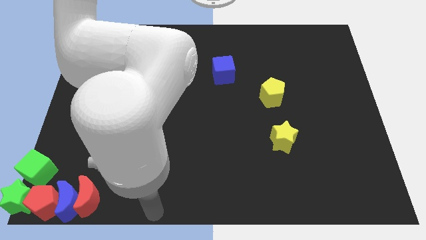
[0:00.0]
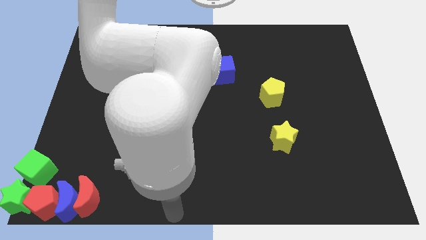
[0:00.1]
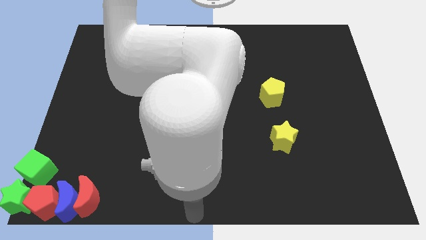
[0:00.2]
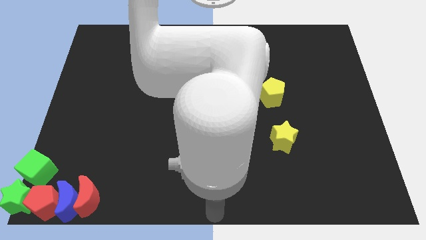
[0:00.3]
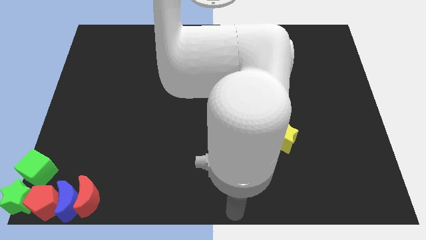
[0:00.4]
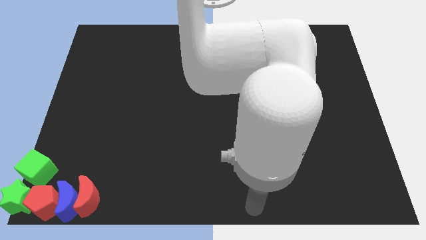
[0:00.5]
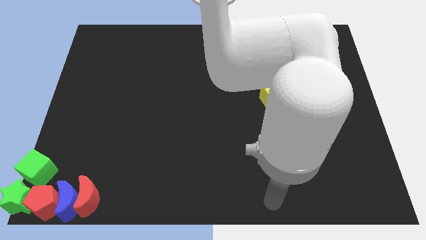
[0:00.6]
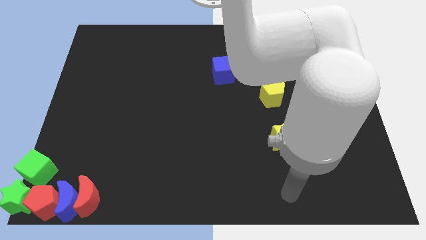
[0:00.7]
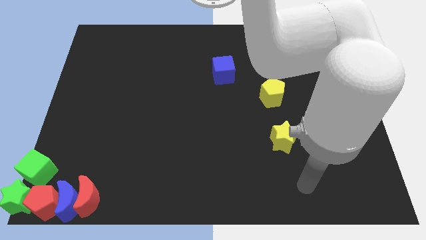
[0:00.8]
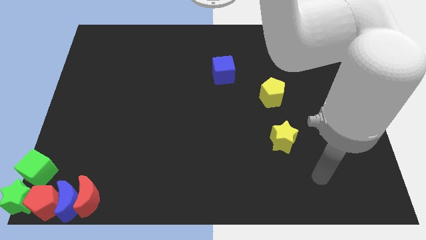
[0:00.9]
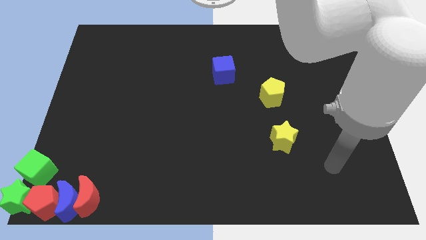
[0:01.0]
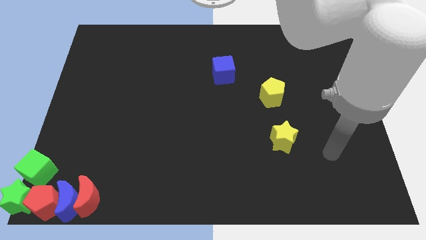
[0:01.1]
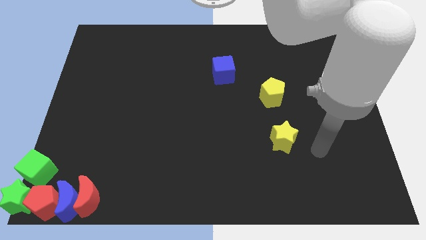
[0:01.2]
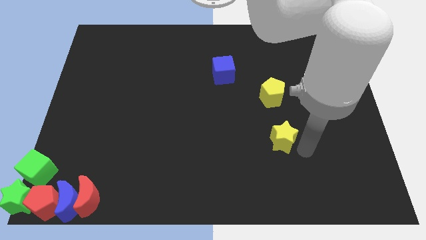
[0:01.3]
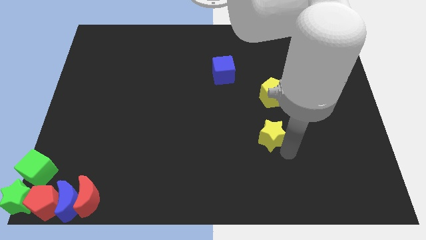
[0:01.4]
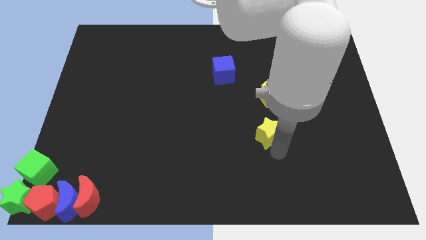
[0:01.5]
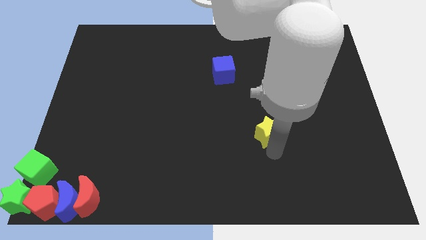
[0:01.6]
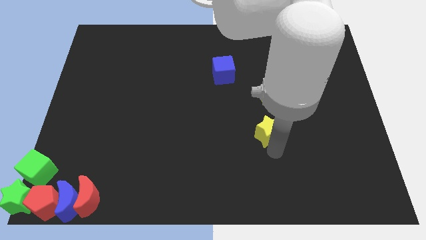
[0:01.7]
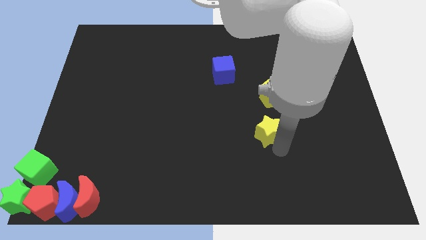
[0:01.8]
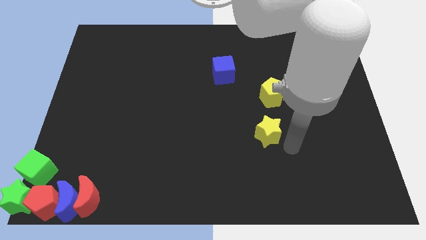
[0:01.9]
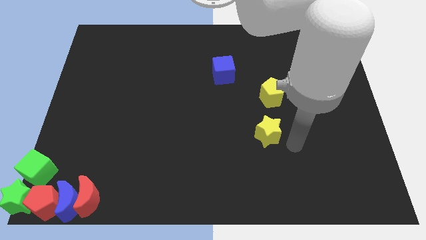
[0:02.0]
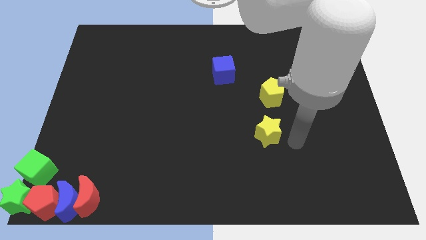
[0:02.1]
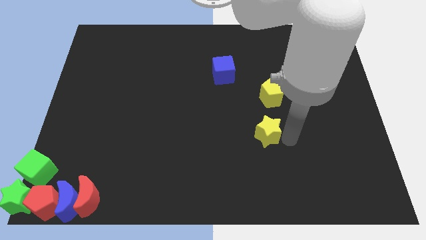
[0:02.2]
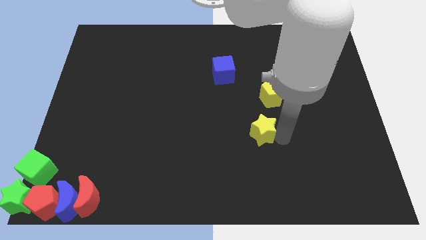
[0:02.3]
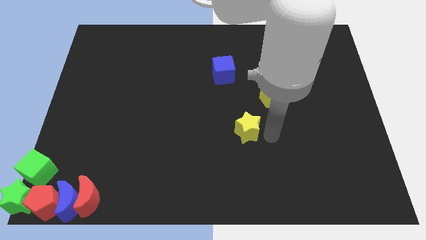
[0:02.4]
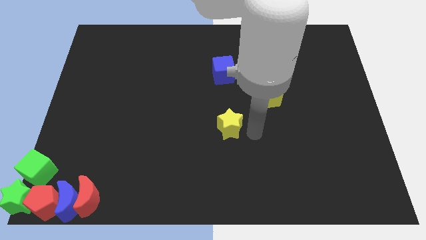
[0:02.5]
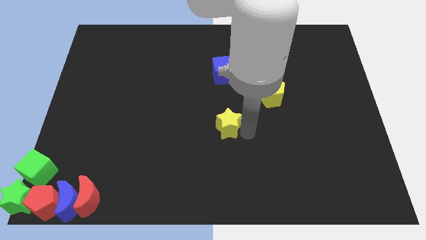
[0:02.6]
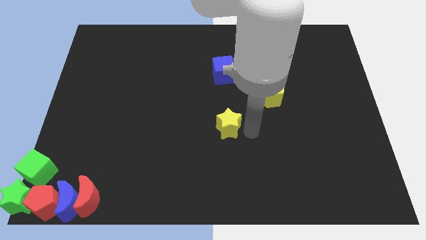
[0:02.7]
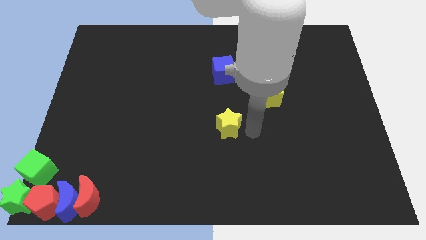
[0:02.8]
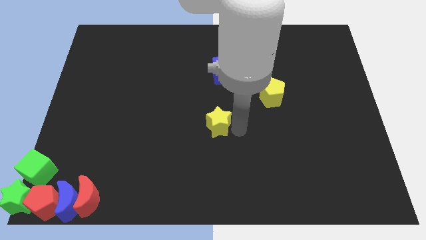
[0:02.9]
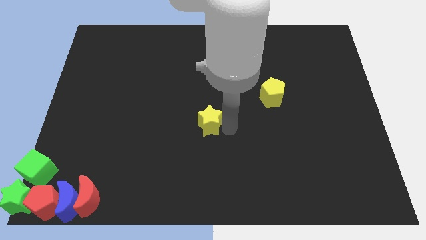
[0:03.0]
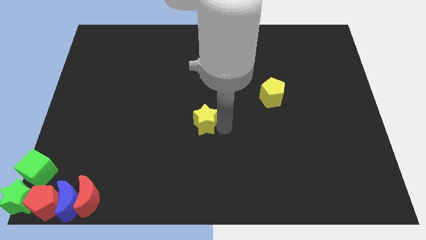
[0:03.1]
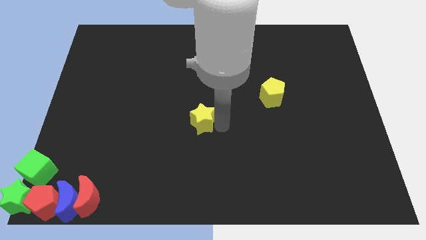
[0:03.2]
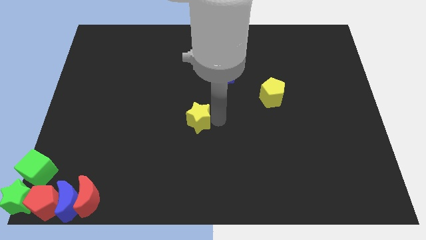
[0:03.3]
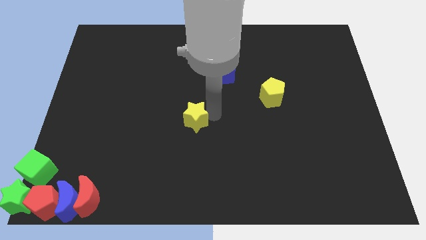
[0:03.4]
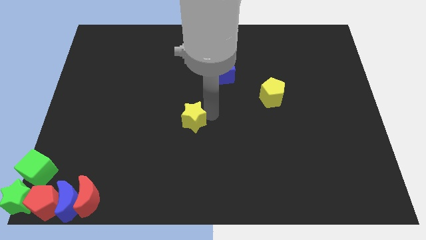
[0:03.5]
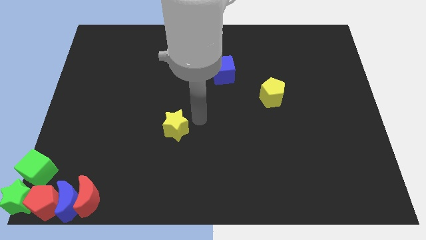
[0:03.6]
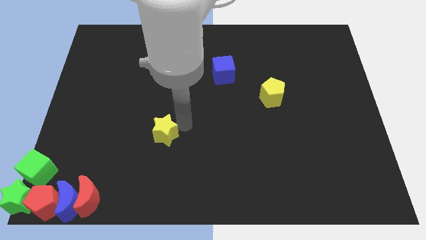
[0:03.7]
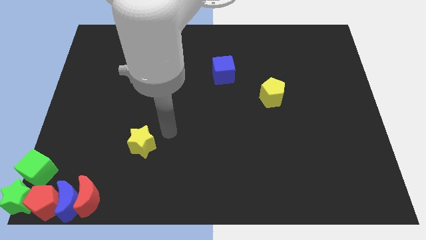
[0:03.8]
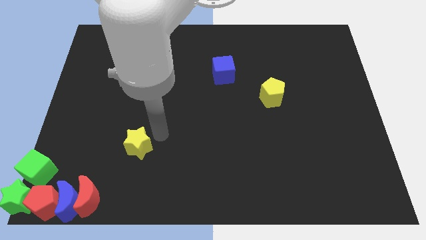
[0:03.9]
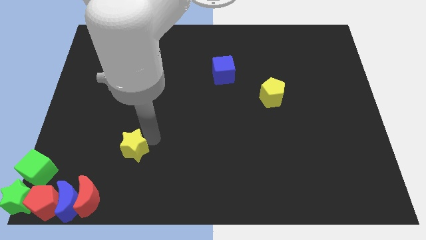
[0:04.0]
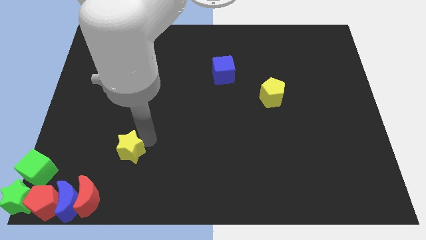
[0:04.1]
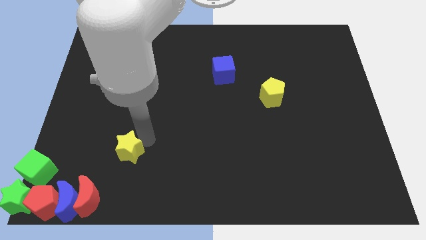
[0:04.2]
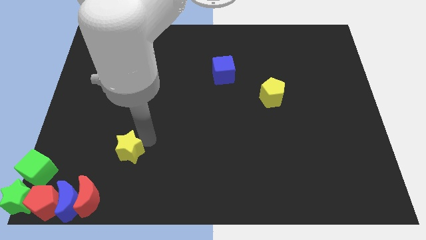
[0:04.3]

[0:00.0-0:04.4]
push the yellow star to the left side of the board

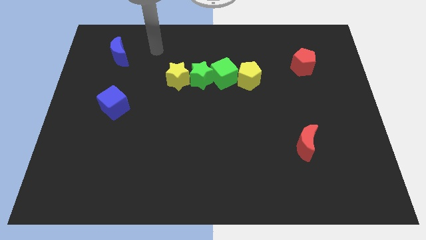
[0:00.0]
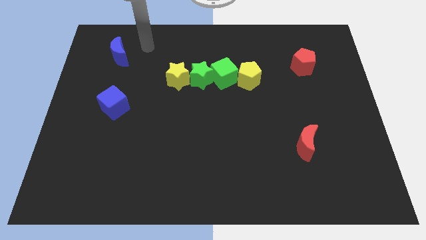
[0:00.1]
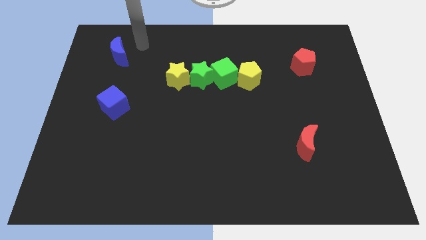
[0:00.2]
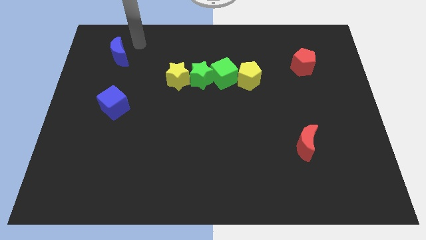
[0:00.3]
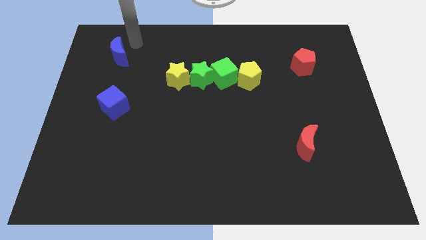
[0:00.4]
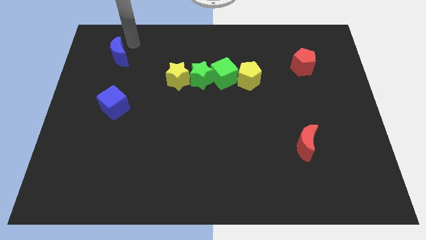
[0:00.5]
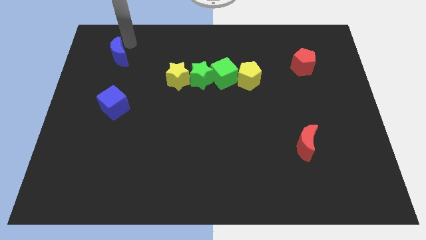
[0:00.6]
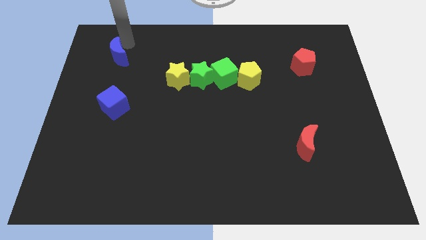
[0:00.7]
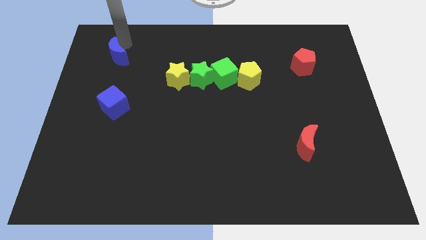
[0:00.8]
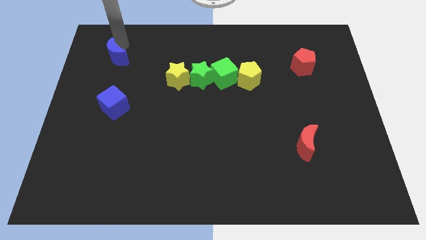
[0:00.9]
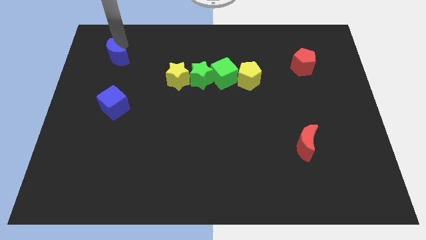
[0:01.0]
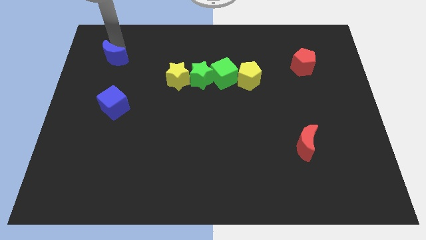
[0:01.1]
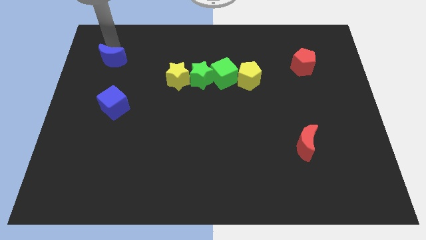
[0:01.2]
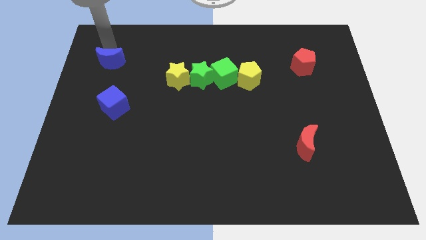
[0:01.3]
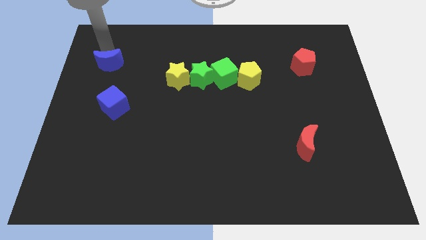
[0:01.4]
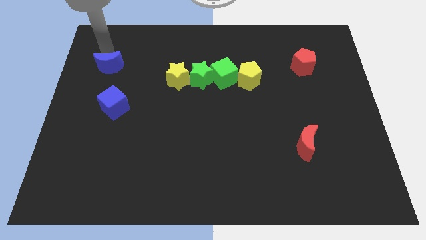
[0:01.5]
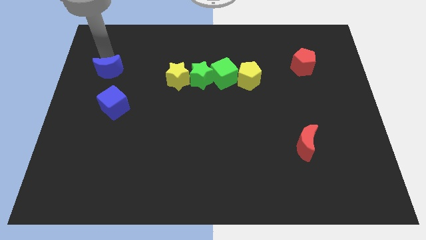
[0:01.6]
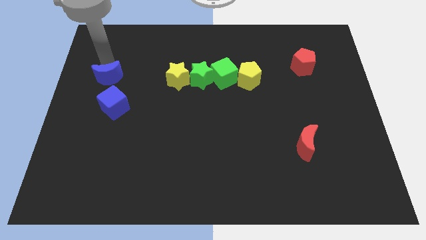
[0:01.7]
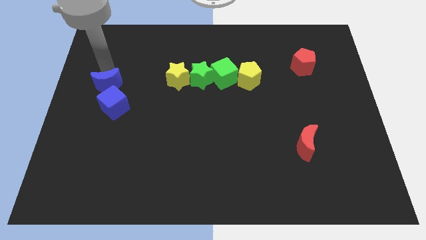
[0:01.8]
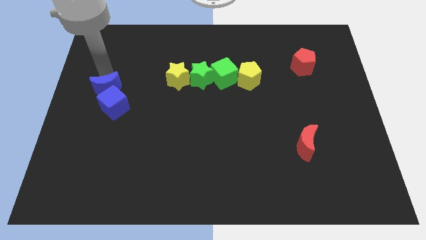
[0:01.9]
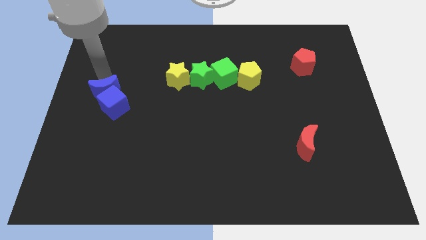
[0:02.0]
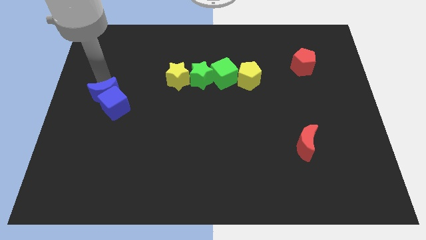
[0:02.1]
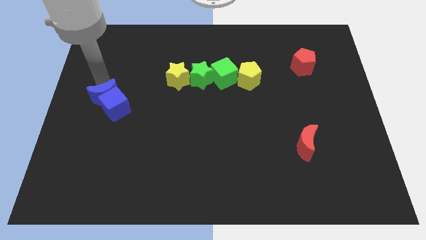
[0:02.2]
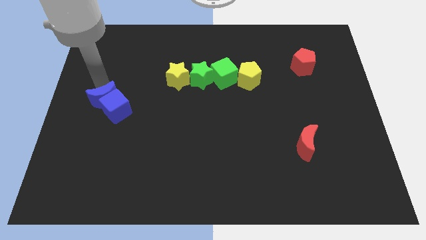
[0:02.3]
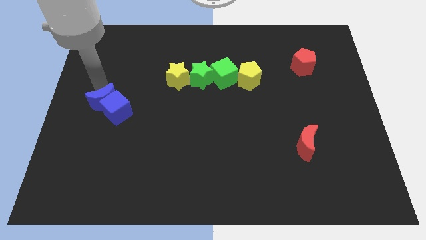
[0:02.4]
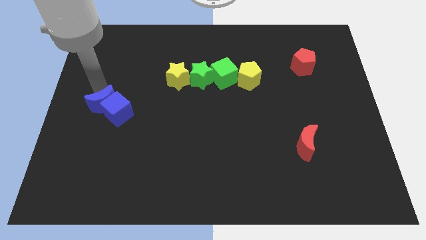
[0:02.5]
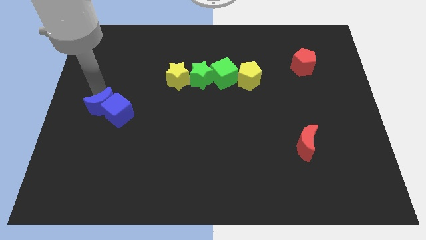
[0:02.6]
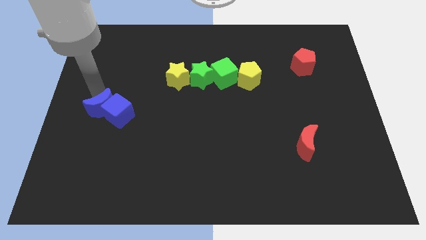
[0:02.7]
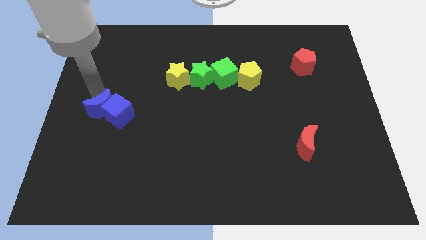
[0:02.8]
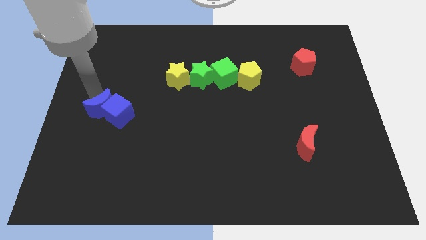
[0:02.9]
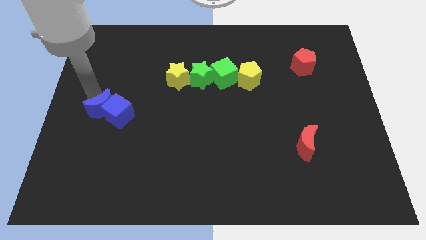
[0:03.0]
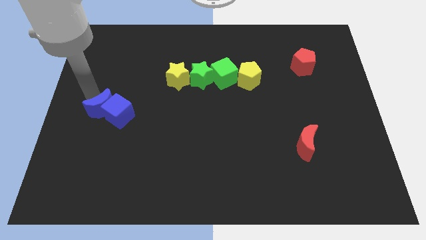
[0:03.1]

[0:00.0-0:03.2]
slide the blue moon into the top left side of the blue cube

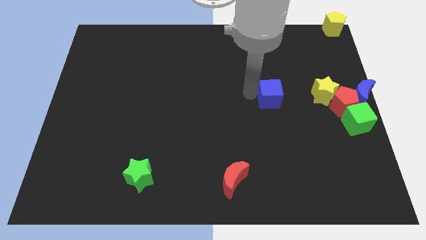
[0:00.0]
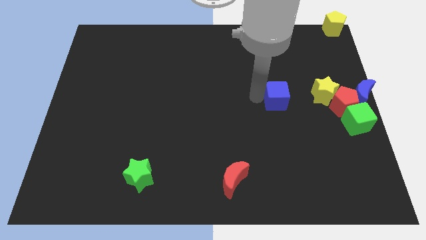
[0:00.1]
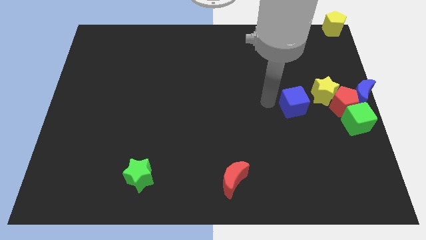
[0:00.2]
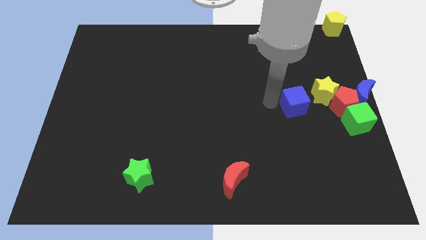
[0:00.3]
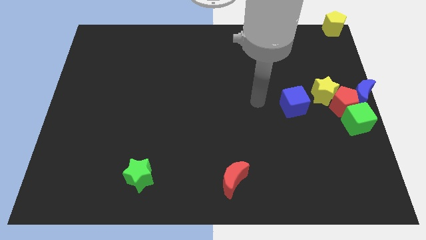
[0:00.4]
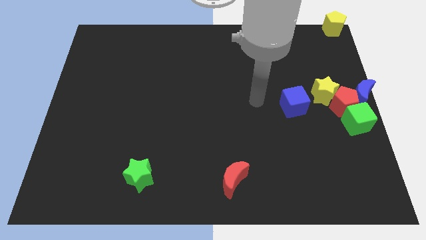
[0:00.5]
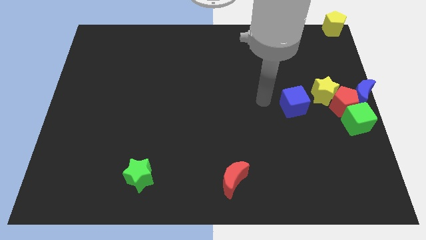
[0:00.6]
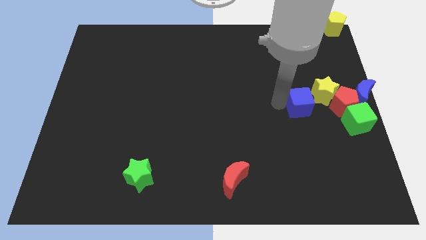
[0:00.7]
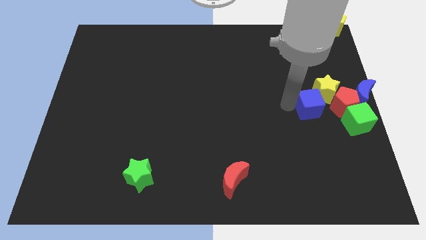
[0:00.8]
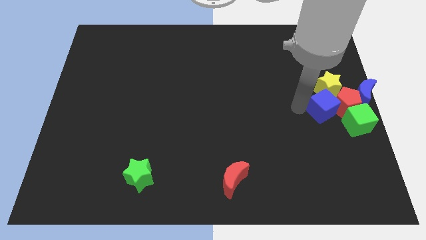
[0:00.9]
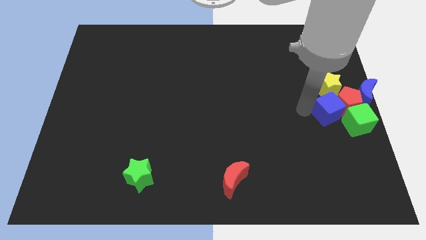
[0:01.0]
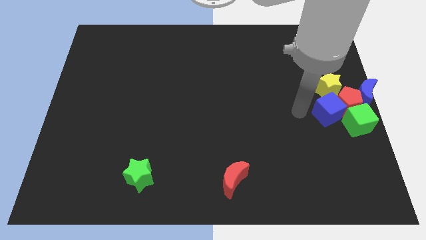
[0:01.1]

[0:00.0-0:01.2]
push the blue cube to the left side of the red pentagon

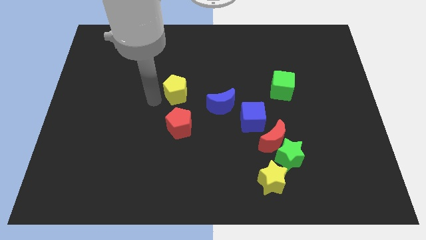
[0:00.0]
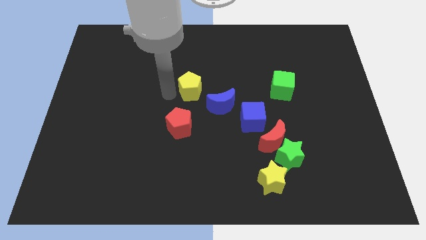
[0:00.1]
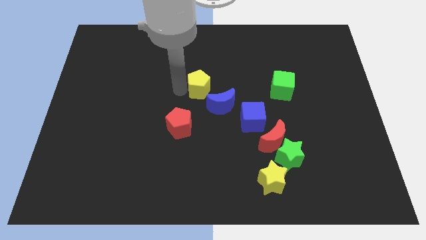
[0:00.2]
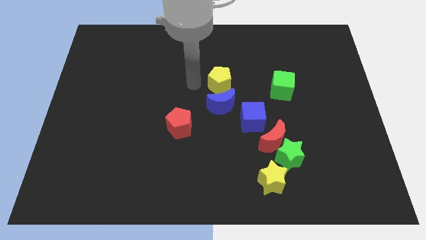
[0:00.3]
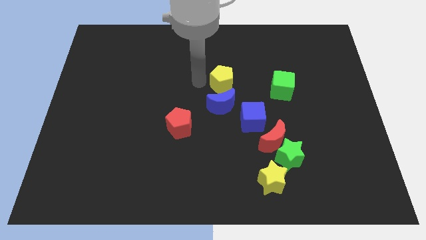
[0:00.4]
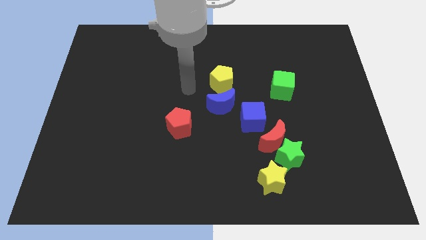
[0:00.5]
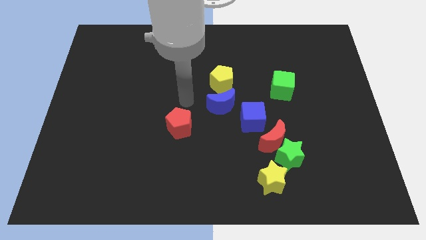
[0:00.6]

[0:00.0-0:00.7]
place the yellow pentagon above the blue moon
